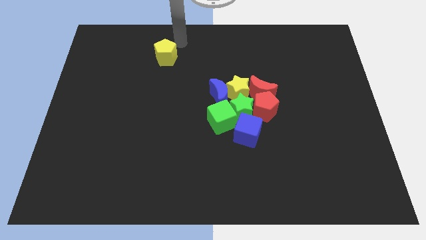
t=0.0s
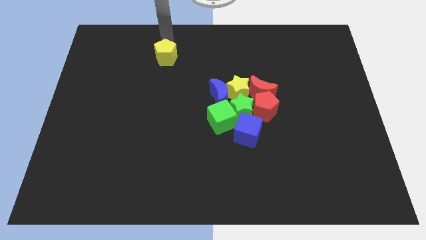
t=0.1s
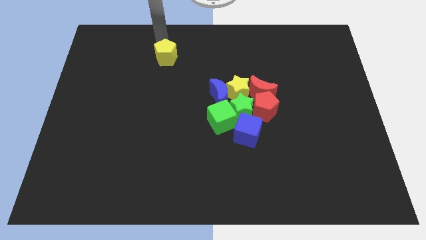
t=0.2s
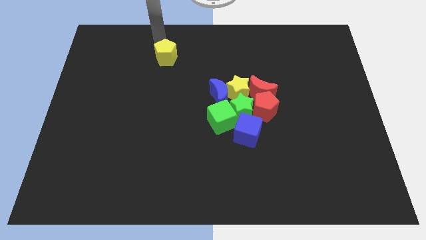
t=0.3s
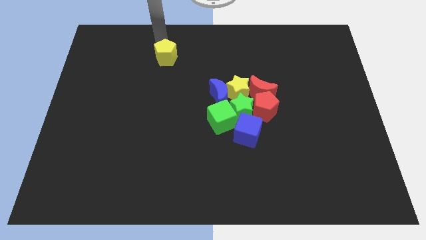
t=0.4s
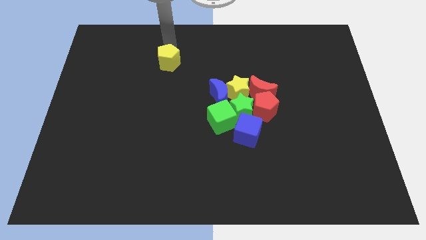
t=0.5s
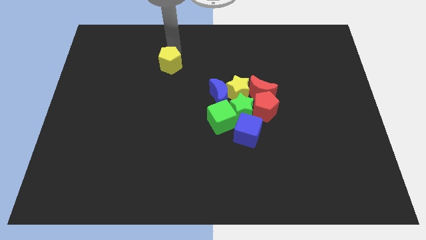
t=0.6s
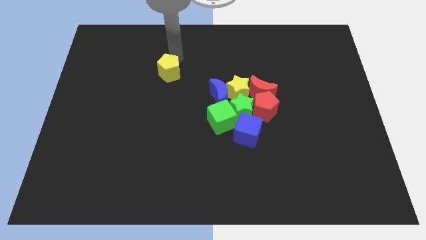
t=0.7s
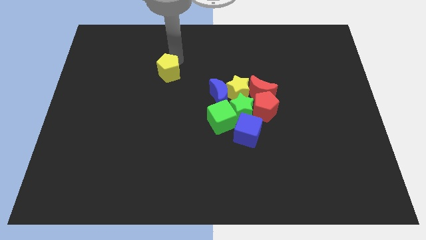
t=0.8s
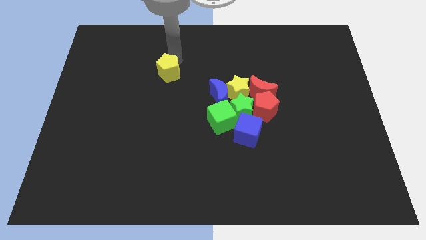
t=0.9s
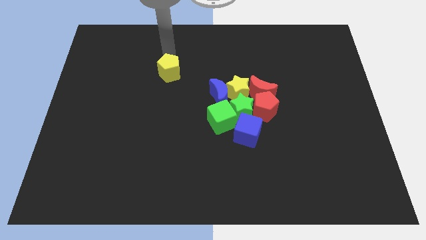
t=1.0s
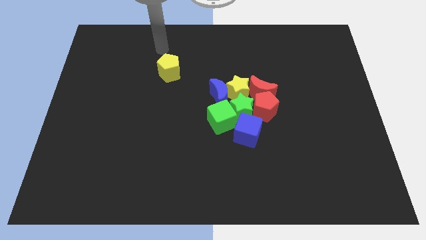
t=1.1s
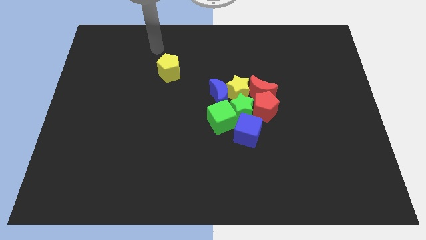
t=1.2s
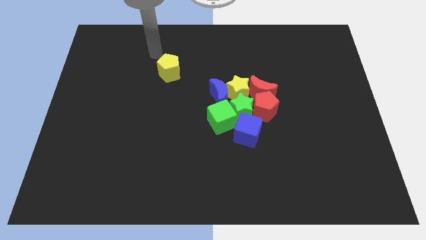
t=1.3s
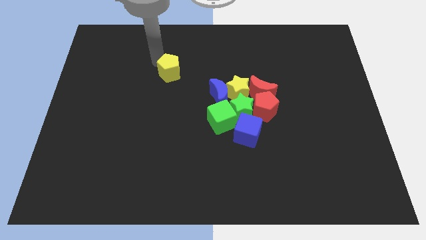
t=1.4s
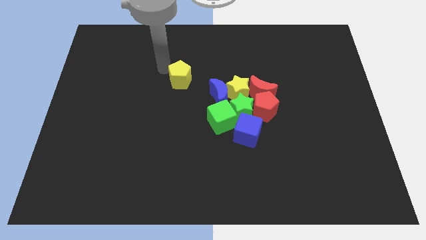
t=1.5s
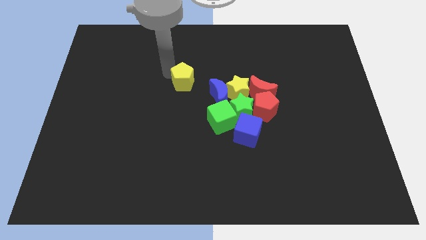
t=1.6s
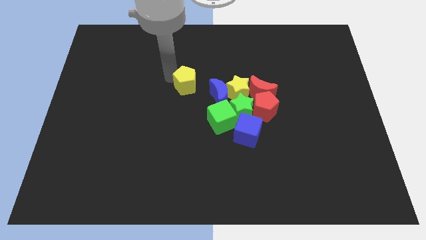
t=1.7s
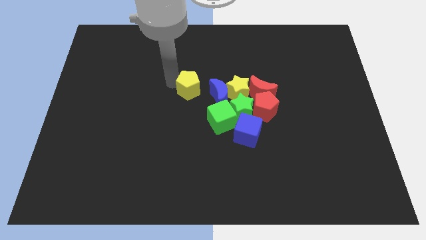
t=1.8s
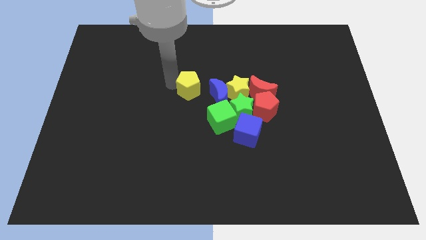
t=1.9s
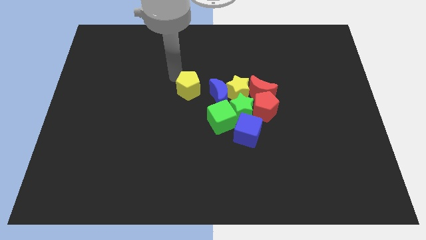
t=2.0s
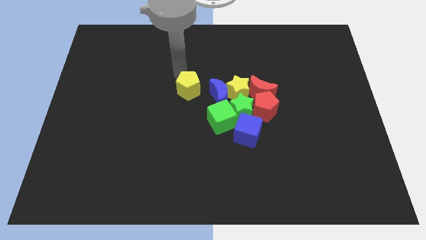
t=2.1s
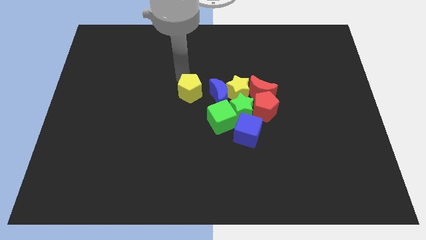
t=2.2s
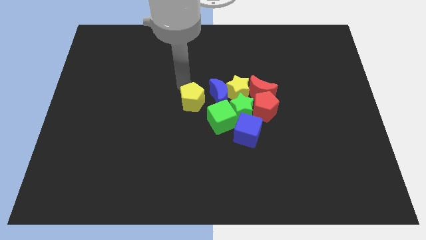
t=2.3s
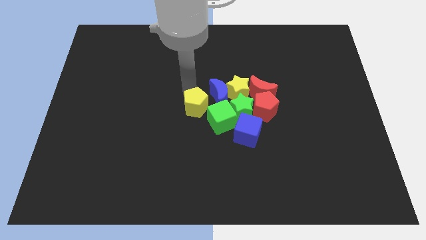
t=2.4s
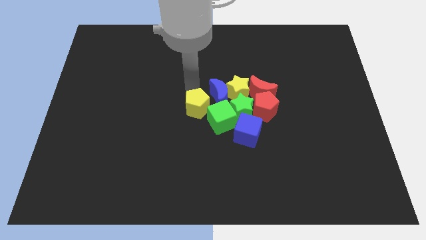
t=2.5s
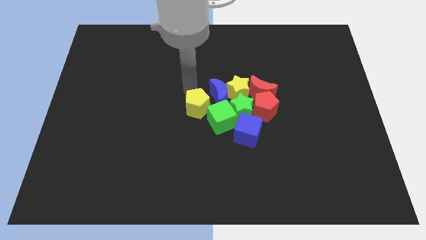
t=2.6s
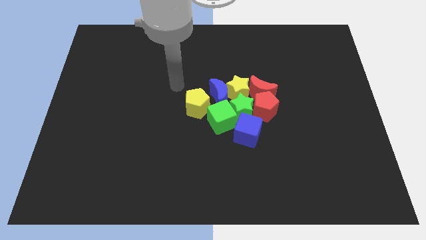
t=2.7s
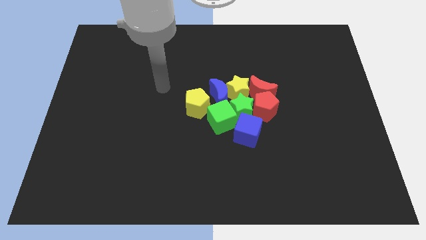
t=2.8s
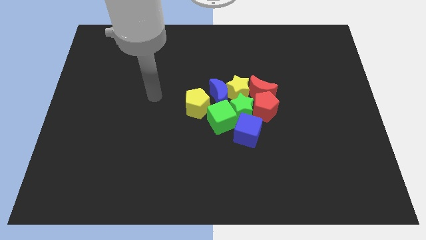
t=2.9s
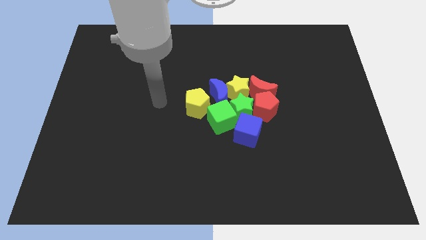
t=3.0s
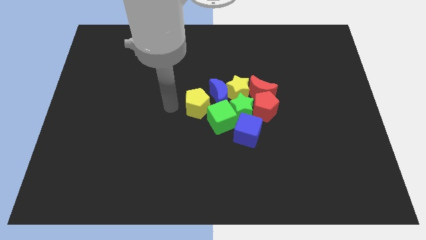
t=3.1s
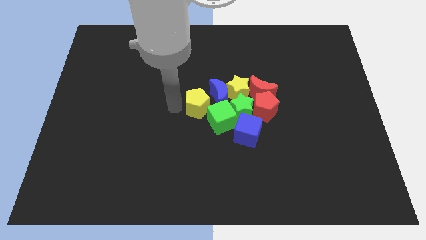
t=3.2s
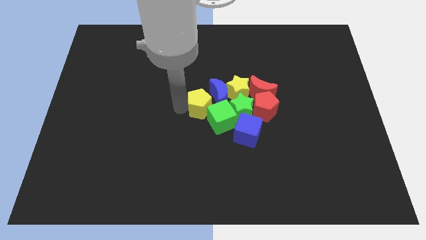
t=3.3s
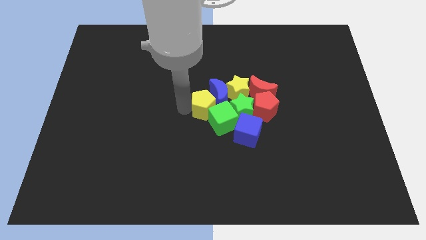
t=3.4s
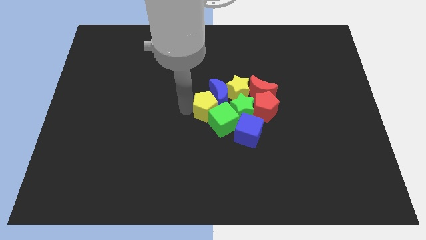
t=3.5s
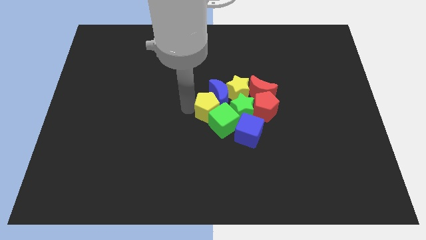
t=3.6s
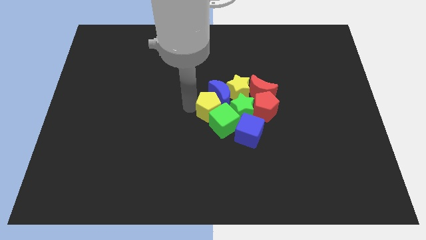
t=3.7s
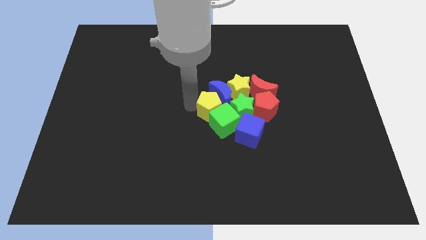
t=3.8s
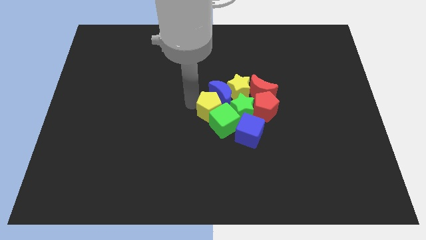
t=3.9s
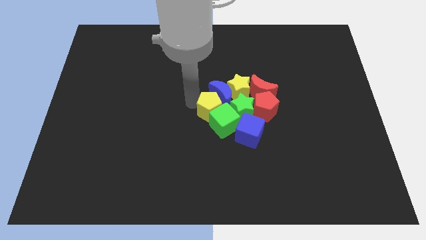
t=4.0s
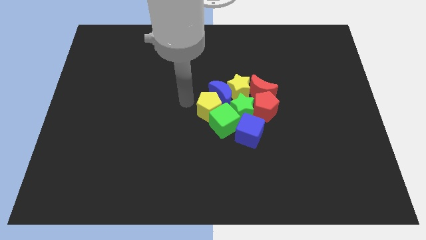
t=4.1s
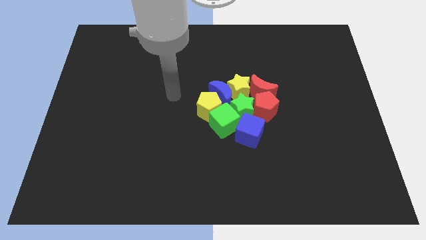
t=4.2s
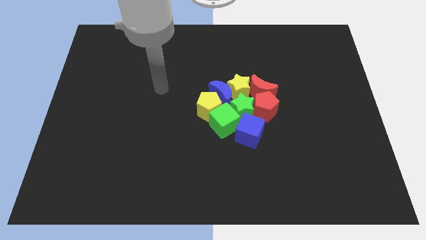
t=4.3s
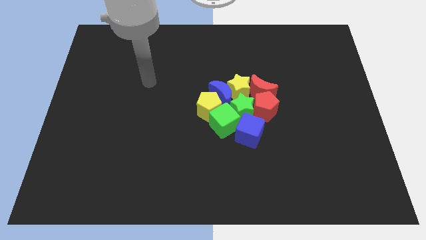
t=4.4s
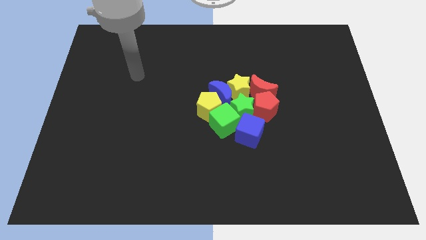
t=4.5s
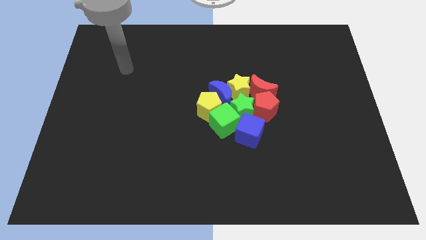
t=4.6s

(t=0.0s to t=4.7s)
push the yellow pentagon towards the group of blocks

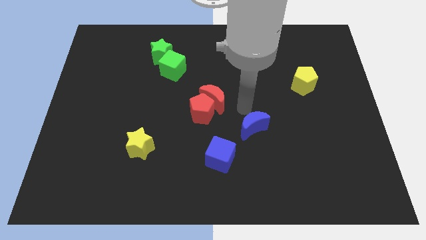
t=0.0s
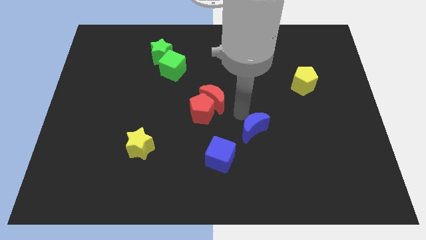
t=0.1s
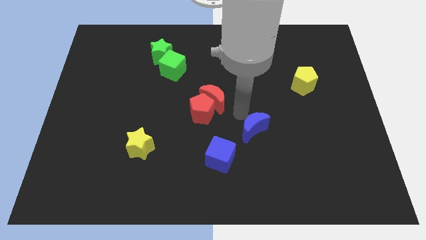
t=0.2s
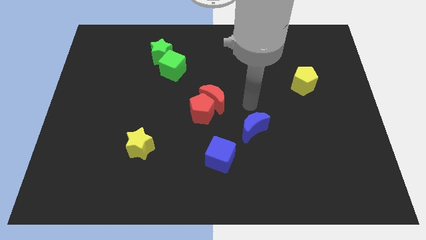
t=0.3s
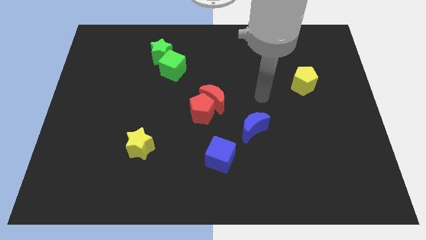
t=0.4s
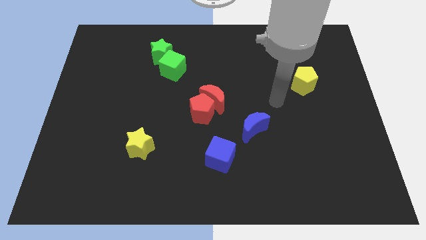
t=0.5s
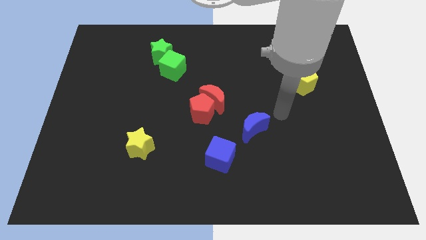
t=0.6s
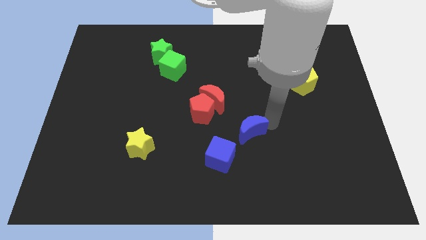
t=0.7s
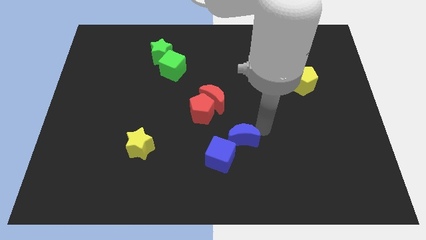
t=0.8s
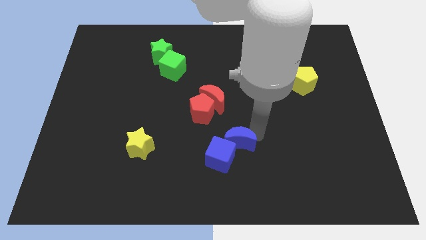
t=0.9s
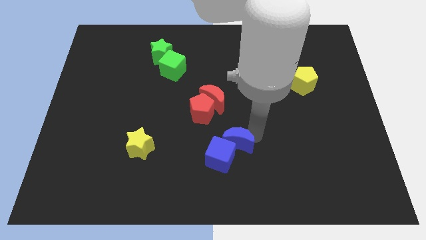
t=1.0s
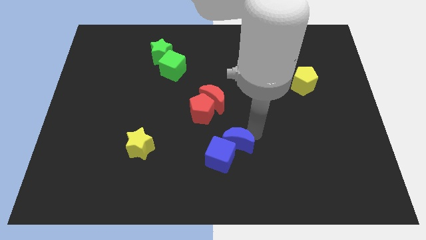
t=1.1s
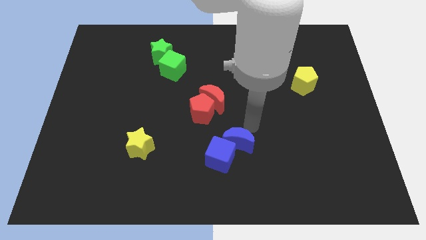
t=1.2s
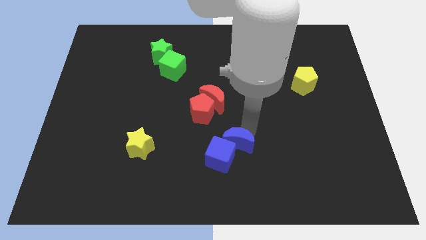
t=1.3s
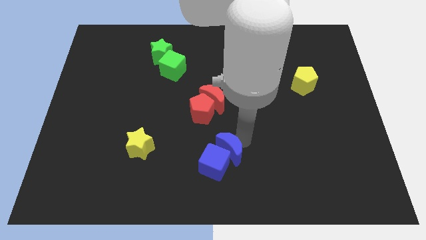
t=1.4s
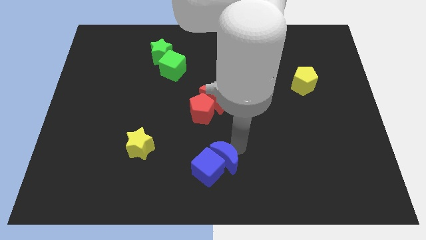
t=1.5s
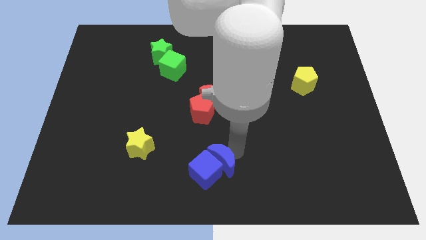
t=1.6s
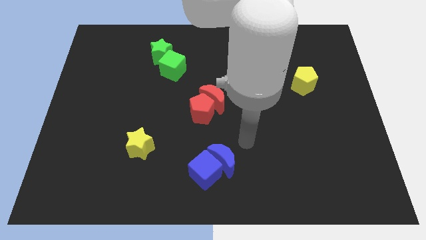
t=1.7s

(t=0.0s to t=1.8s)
push the blue crescent into the blue cube

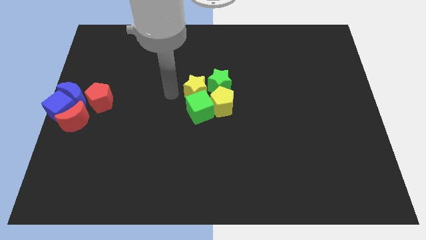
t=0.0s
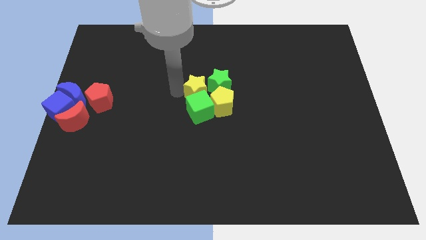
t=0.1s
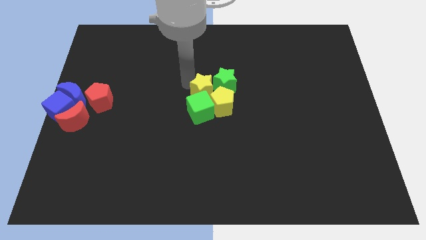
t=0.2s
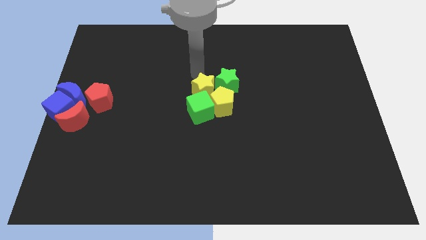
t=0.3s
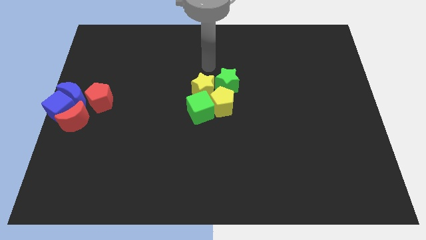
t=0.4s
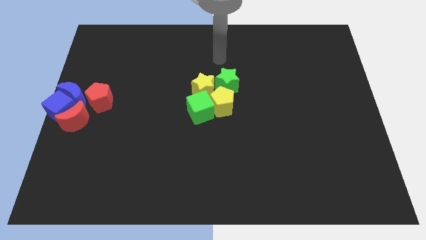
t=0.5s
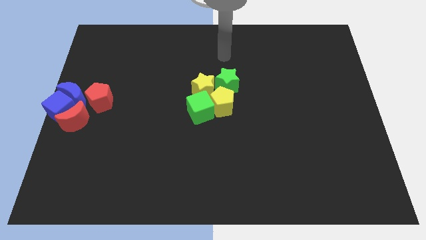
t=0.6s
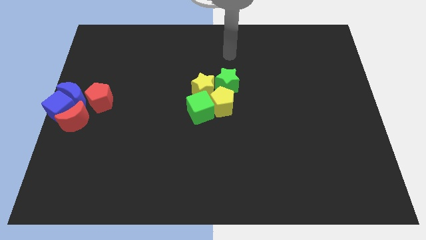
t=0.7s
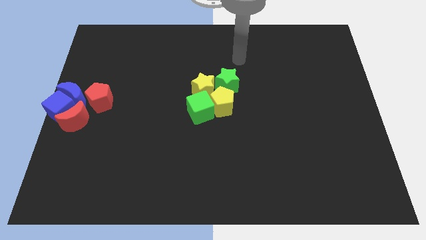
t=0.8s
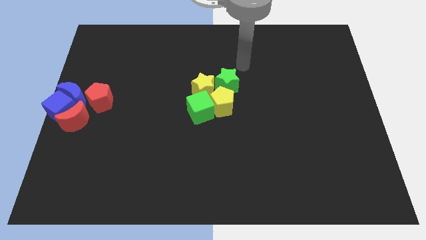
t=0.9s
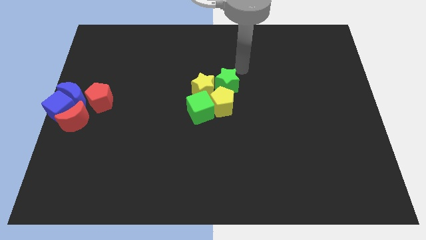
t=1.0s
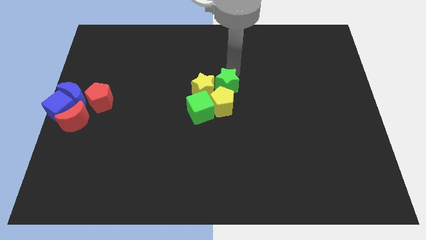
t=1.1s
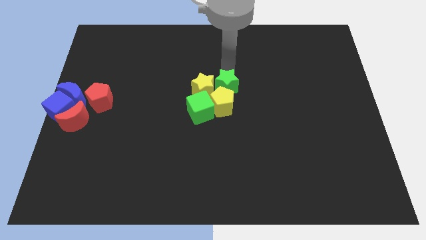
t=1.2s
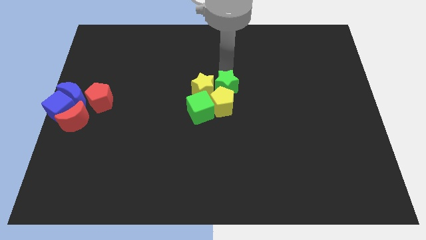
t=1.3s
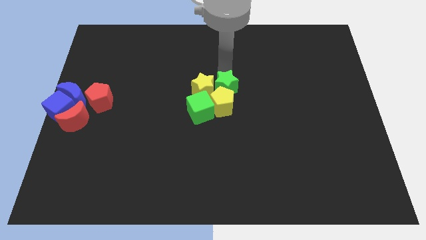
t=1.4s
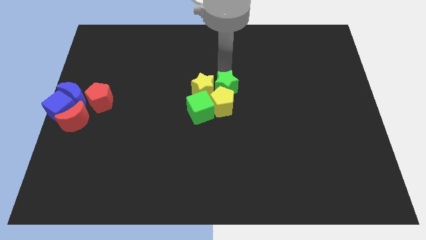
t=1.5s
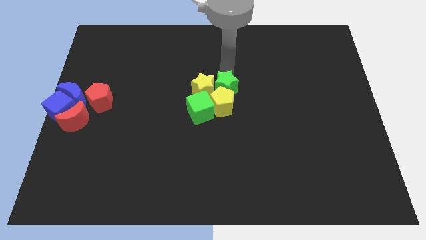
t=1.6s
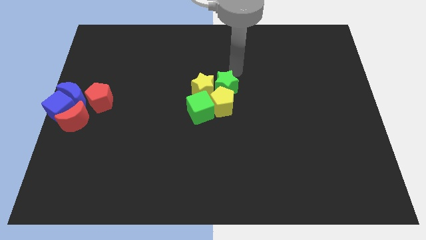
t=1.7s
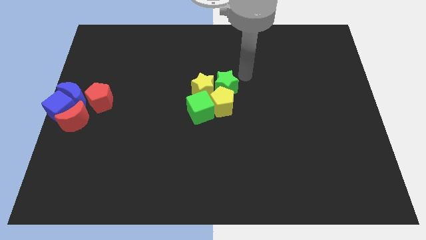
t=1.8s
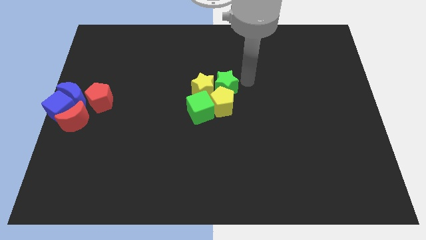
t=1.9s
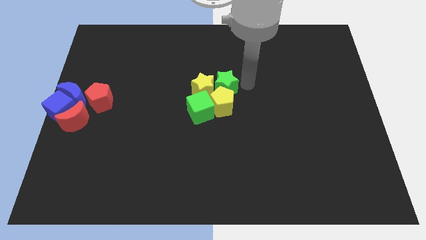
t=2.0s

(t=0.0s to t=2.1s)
move green star close to the yellow star

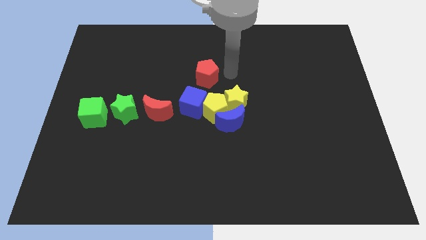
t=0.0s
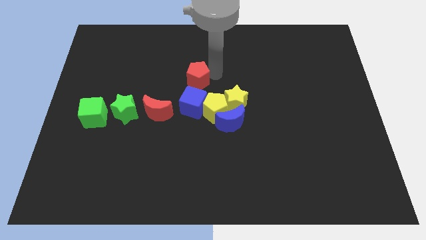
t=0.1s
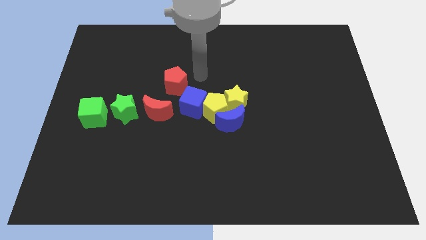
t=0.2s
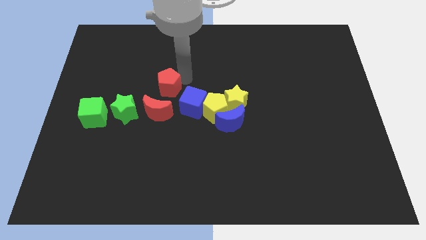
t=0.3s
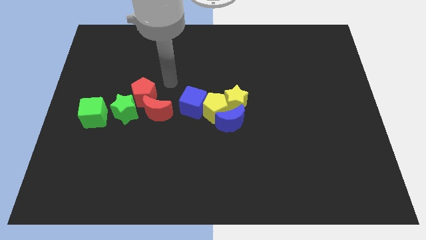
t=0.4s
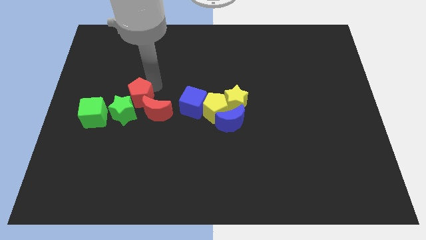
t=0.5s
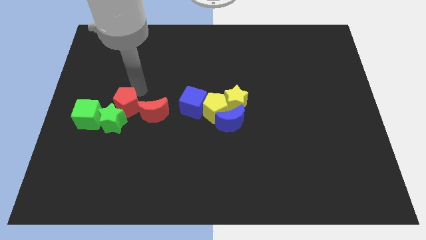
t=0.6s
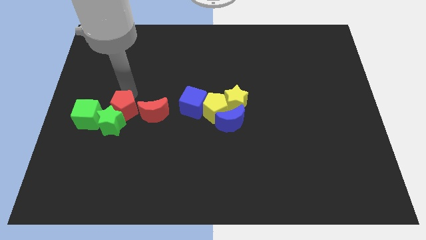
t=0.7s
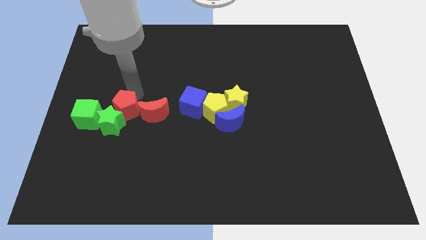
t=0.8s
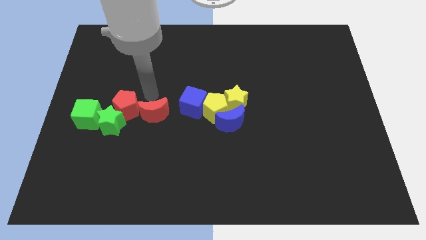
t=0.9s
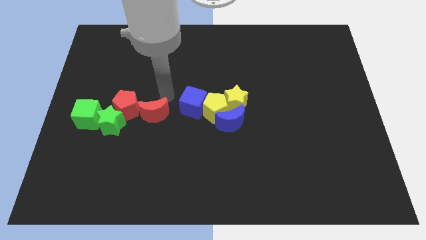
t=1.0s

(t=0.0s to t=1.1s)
place the red pentagon above the green star
